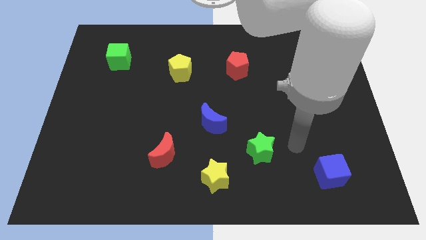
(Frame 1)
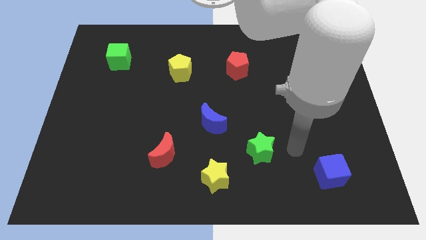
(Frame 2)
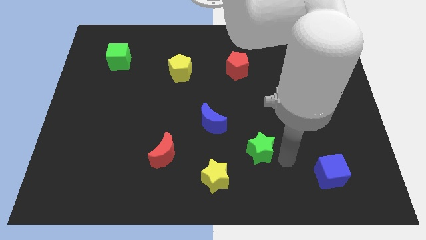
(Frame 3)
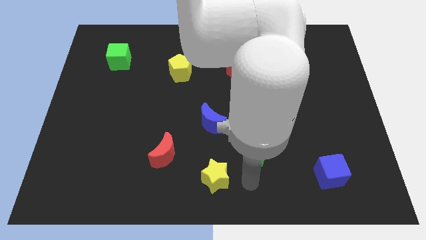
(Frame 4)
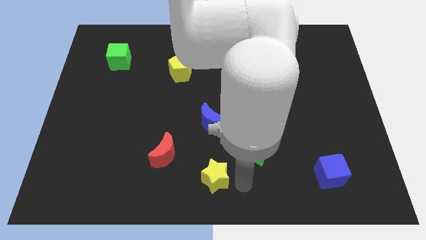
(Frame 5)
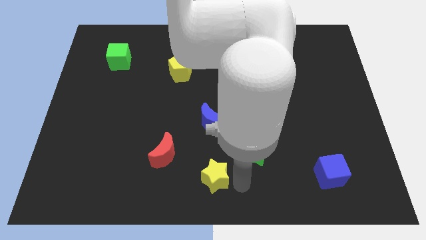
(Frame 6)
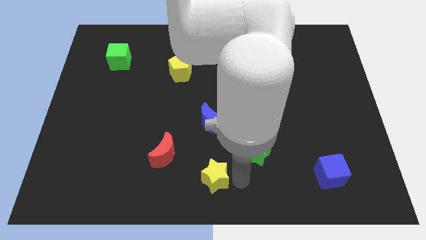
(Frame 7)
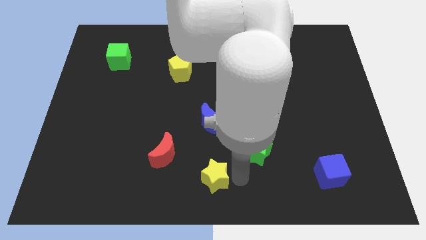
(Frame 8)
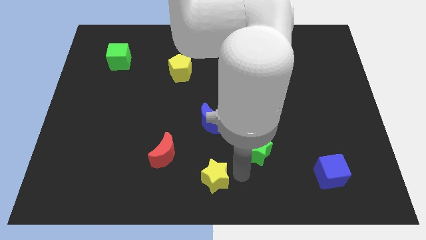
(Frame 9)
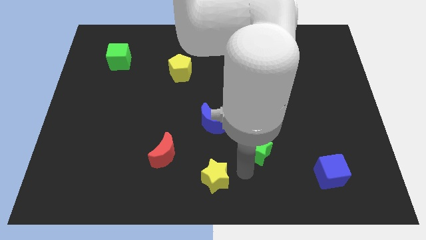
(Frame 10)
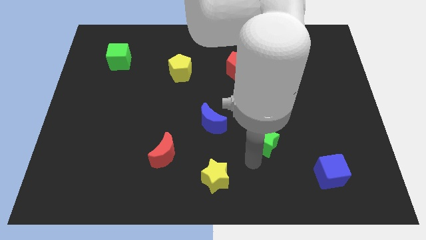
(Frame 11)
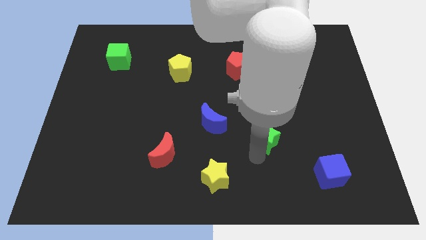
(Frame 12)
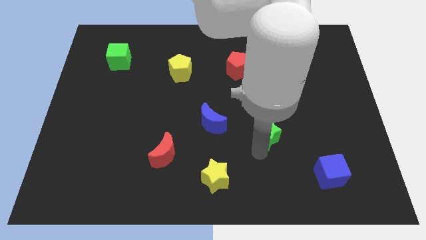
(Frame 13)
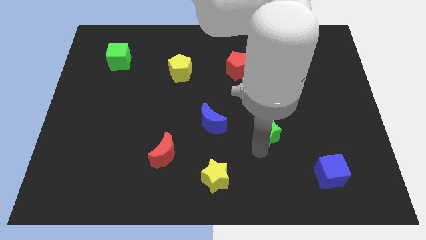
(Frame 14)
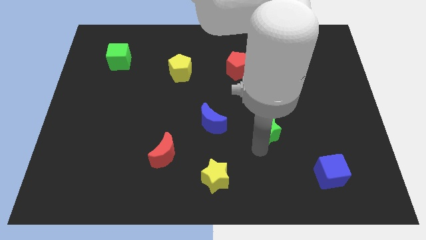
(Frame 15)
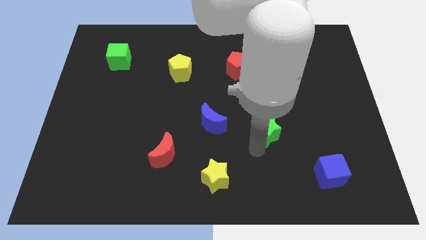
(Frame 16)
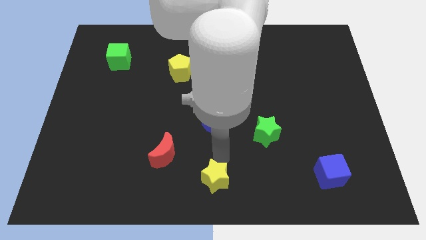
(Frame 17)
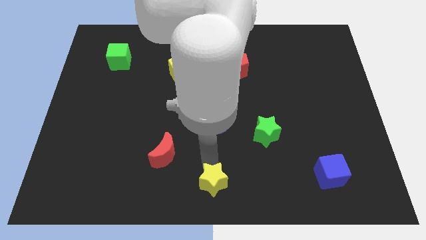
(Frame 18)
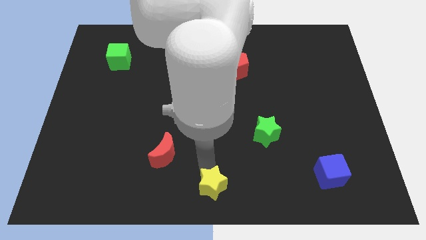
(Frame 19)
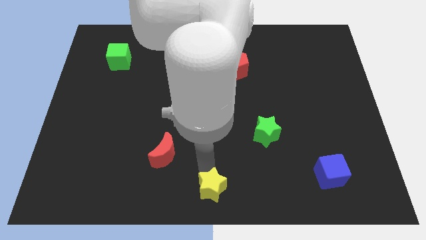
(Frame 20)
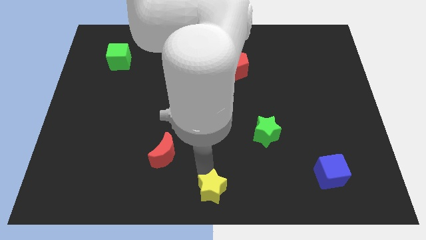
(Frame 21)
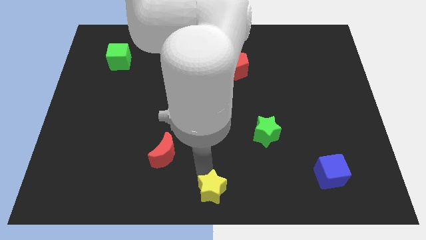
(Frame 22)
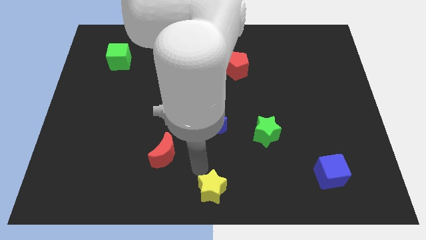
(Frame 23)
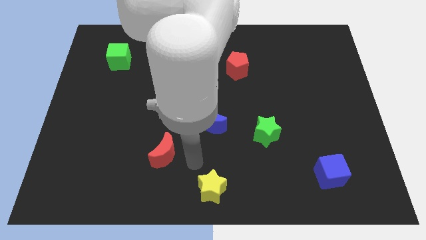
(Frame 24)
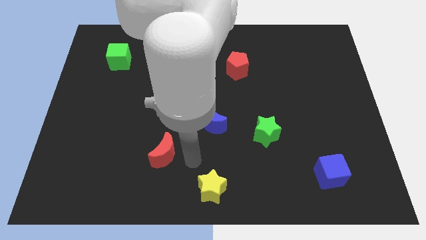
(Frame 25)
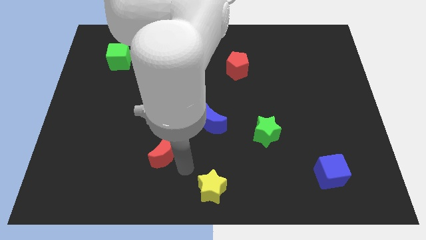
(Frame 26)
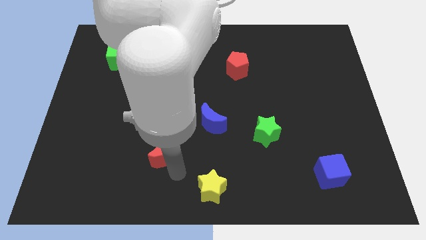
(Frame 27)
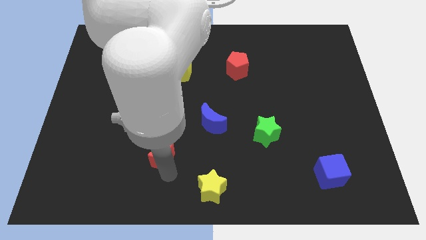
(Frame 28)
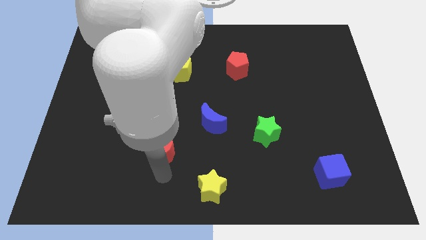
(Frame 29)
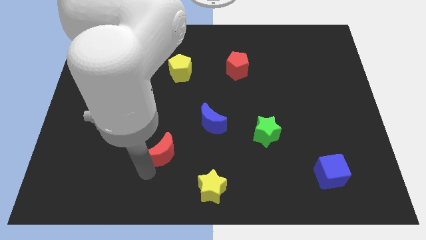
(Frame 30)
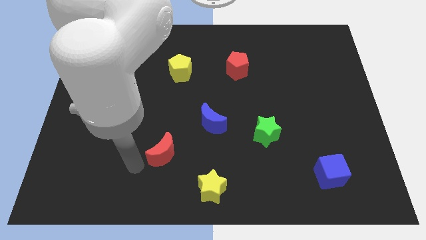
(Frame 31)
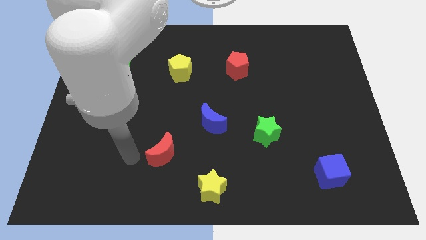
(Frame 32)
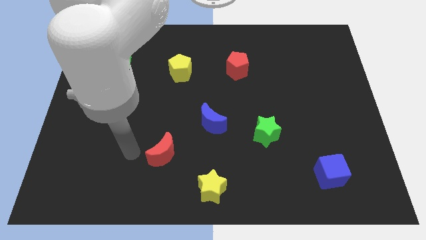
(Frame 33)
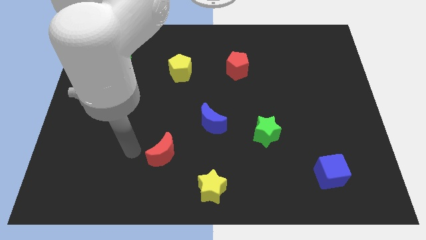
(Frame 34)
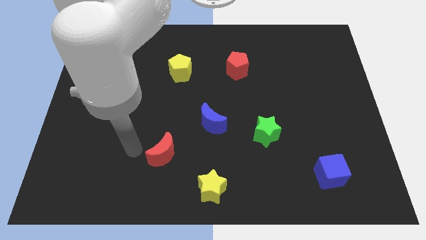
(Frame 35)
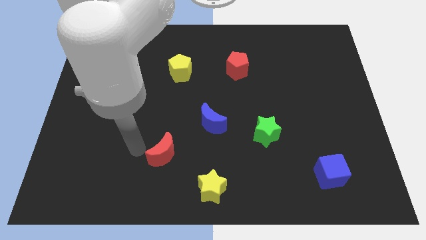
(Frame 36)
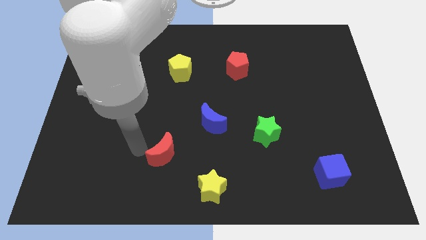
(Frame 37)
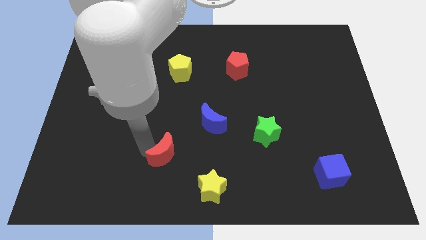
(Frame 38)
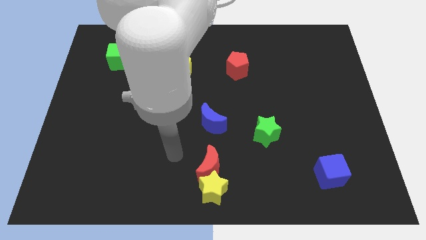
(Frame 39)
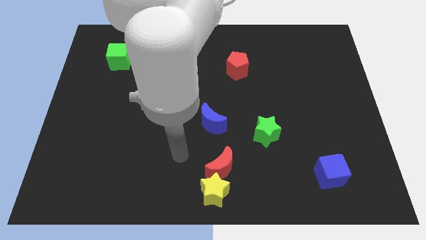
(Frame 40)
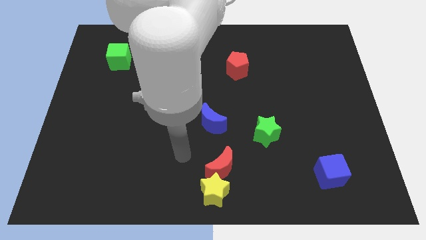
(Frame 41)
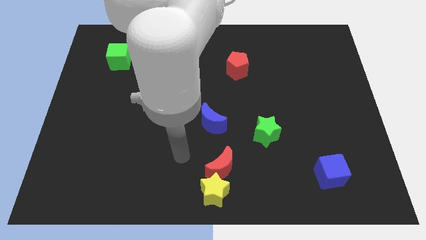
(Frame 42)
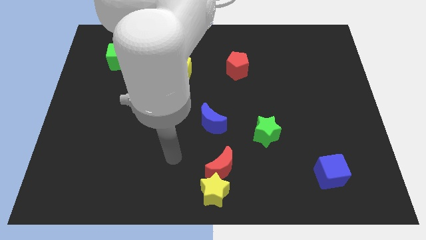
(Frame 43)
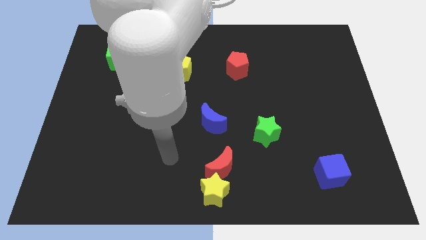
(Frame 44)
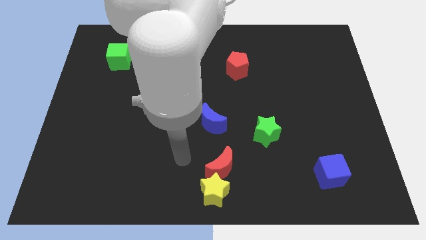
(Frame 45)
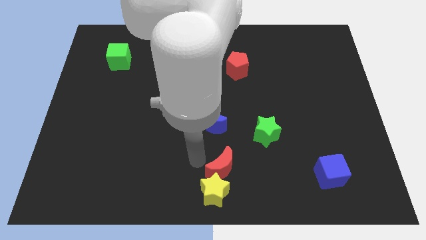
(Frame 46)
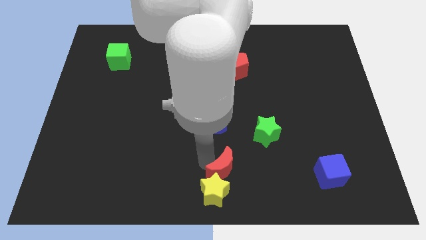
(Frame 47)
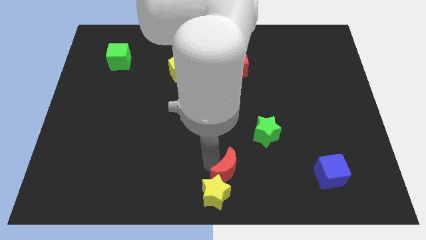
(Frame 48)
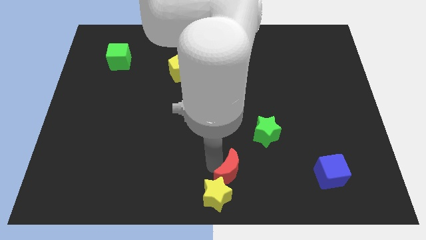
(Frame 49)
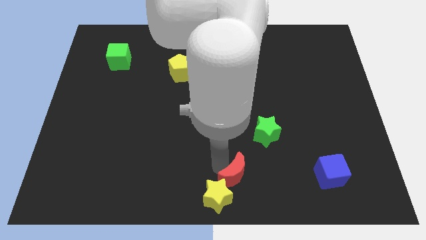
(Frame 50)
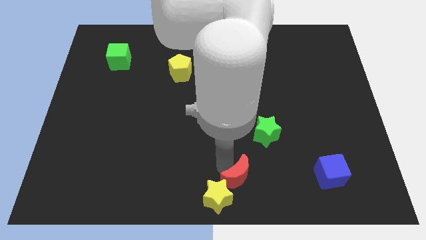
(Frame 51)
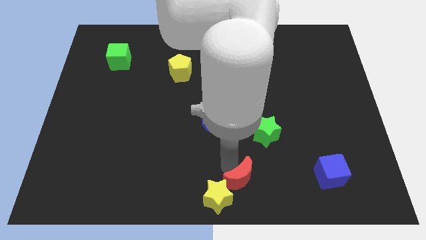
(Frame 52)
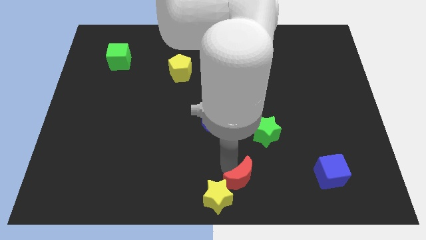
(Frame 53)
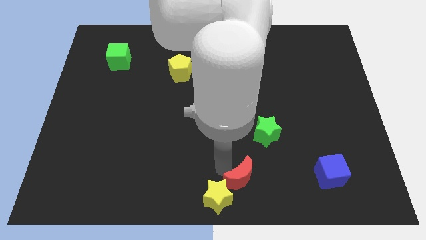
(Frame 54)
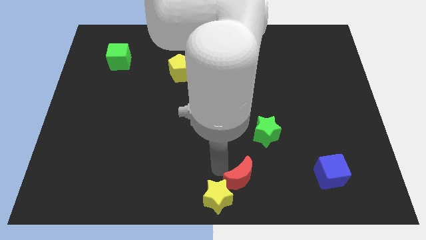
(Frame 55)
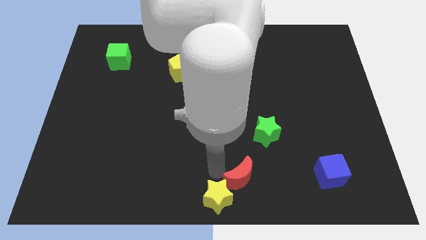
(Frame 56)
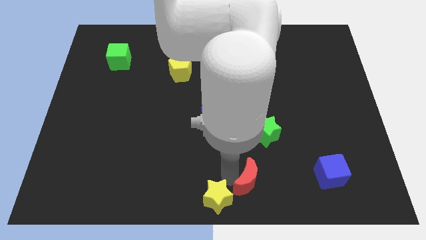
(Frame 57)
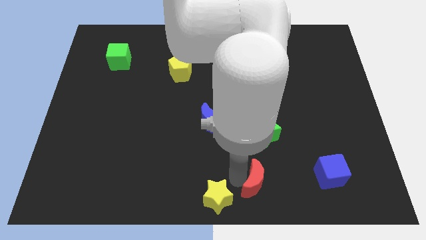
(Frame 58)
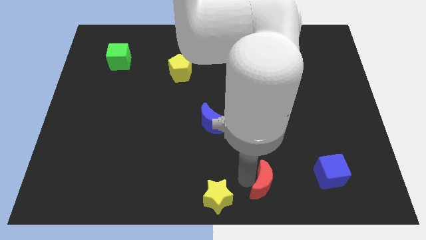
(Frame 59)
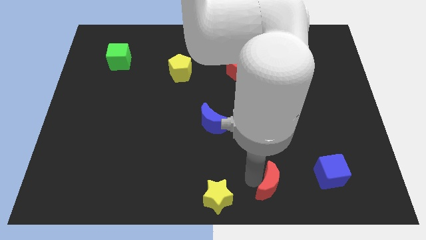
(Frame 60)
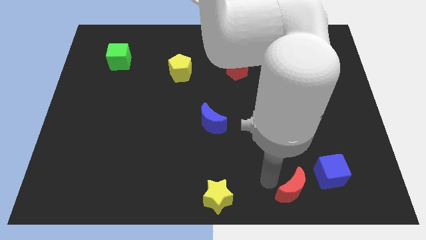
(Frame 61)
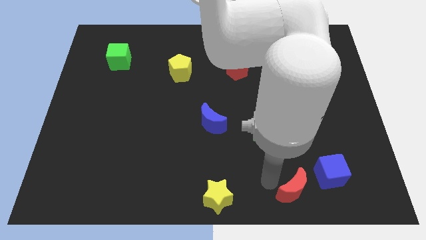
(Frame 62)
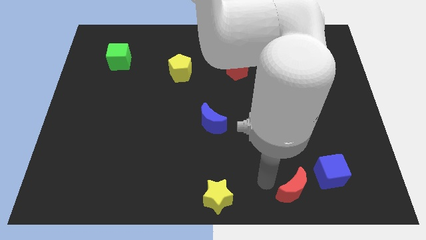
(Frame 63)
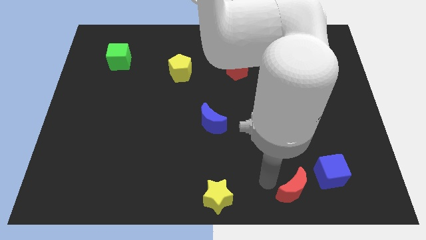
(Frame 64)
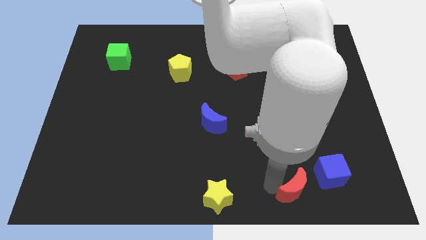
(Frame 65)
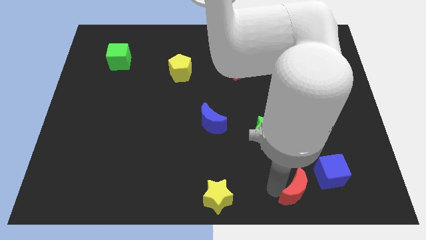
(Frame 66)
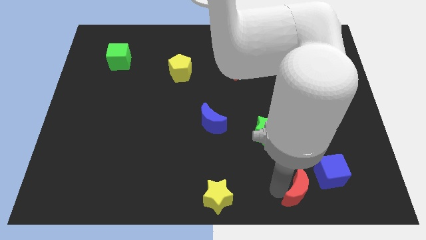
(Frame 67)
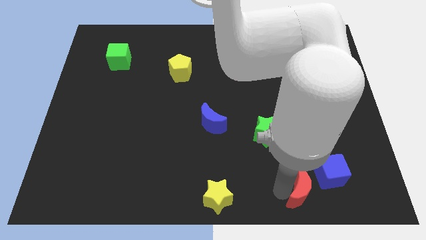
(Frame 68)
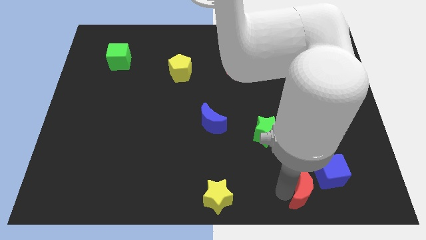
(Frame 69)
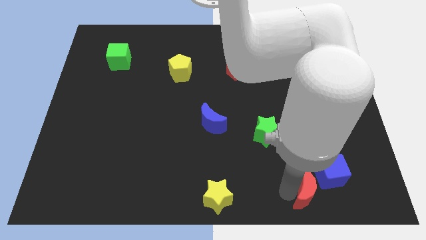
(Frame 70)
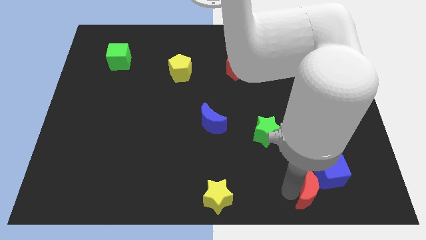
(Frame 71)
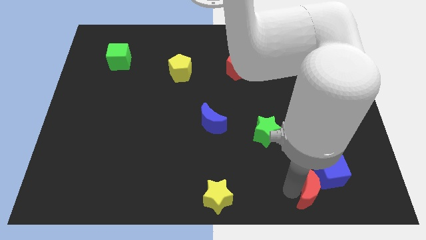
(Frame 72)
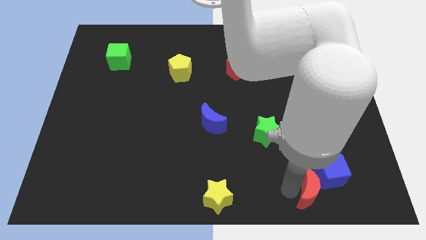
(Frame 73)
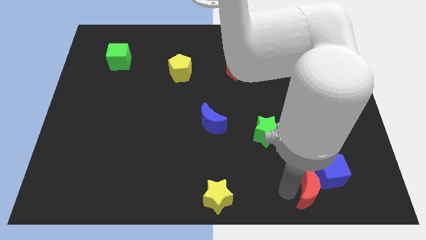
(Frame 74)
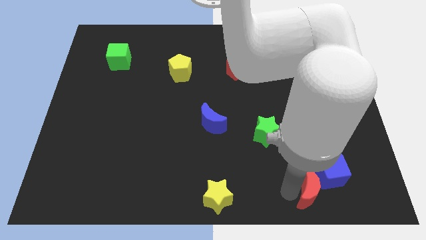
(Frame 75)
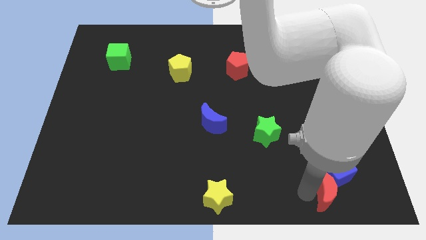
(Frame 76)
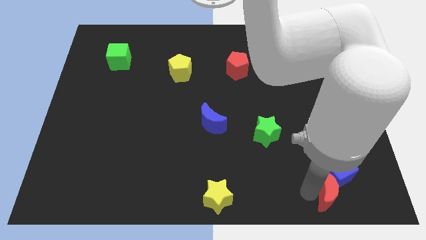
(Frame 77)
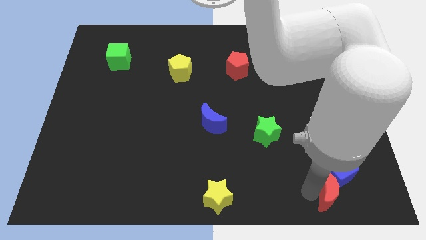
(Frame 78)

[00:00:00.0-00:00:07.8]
slide the red moon towards the blue cube
